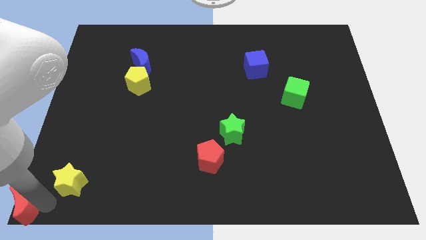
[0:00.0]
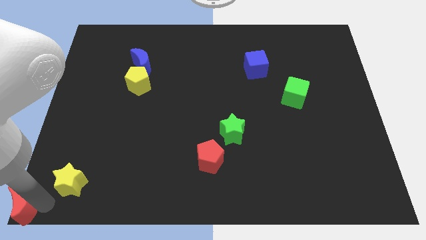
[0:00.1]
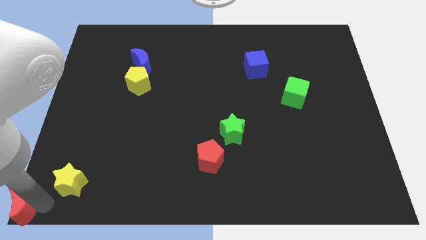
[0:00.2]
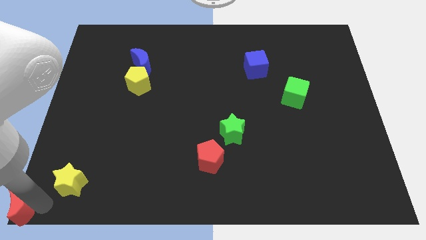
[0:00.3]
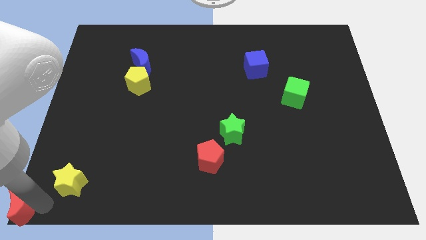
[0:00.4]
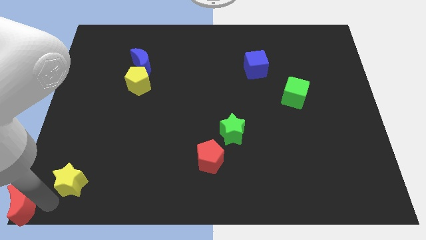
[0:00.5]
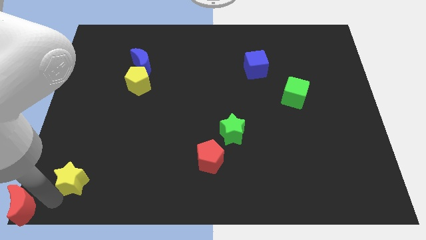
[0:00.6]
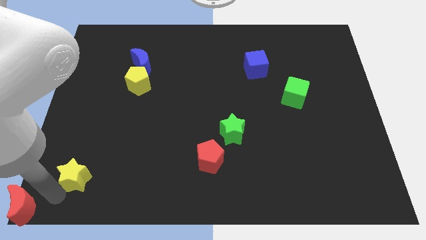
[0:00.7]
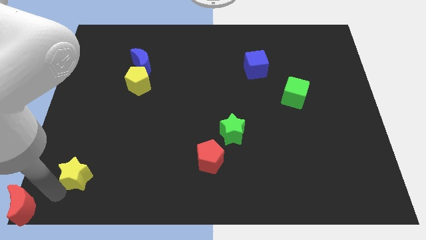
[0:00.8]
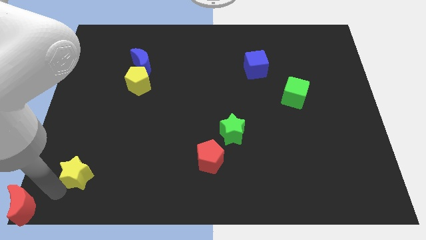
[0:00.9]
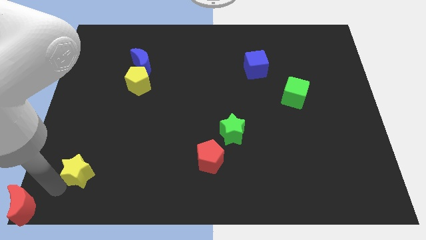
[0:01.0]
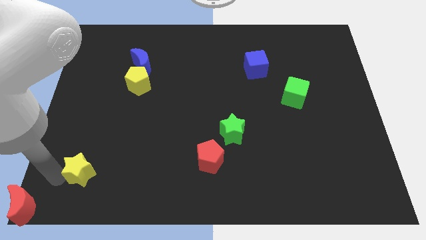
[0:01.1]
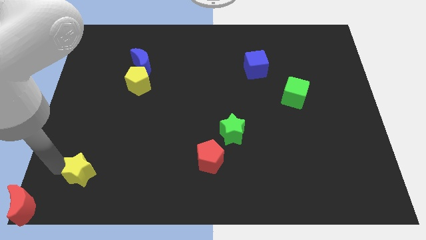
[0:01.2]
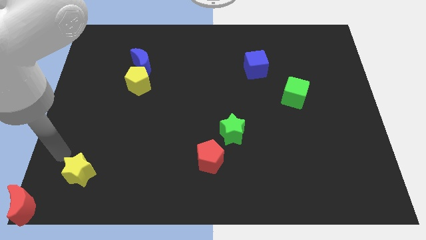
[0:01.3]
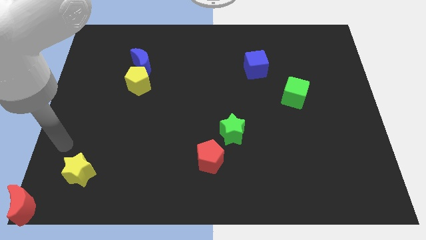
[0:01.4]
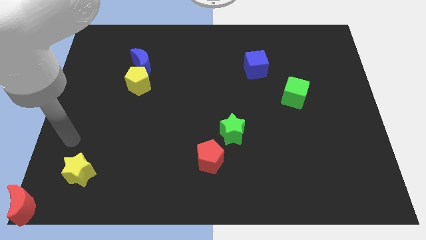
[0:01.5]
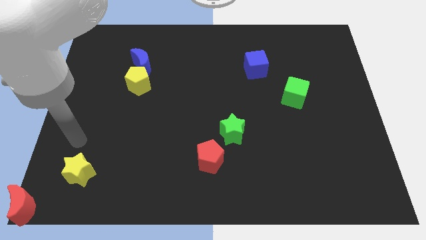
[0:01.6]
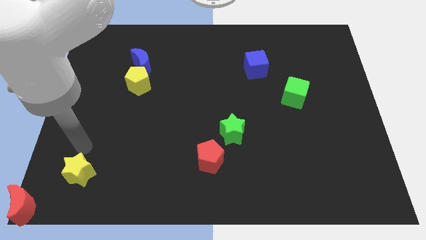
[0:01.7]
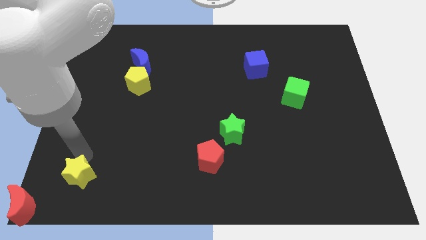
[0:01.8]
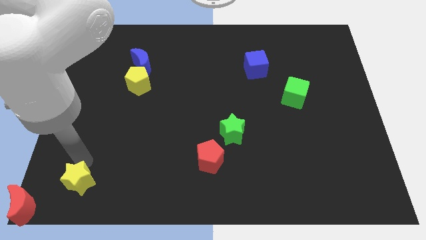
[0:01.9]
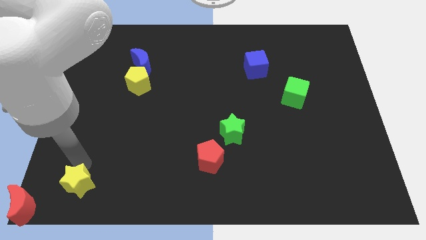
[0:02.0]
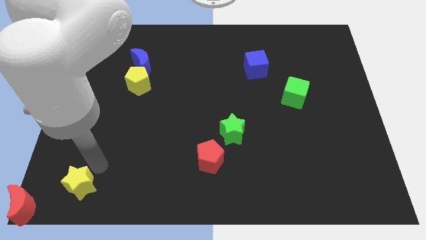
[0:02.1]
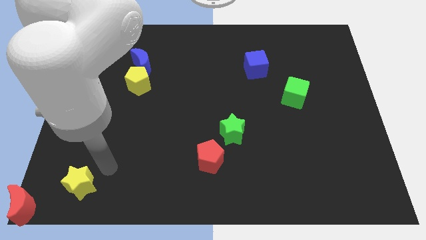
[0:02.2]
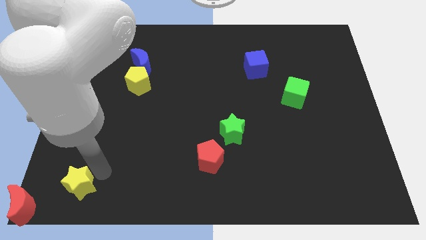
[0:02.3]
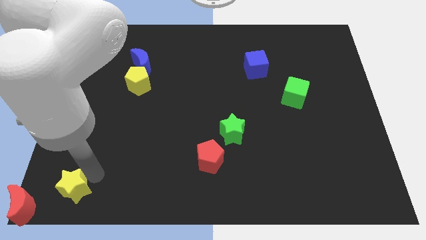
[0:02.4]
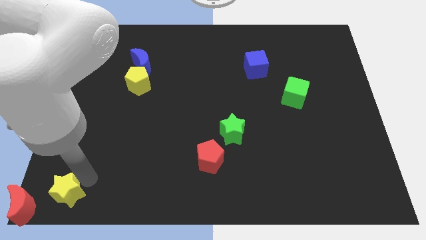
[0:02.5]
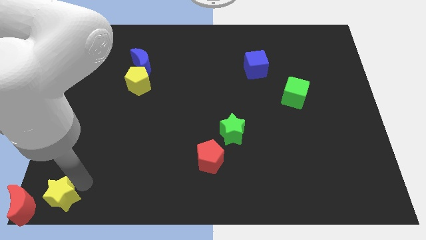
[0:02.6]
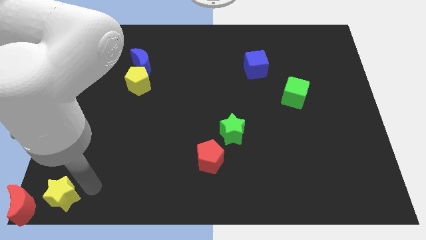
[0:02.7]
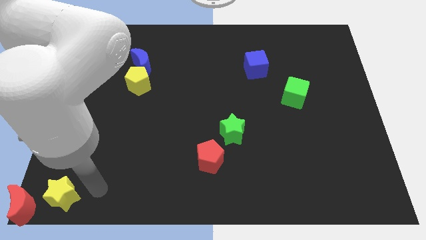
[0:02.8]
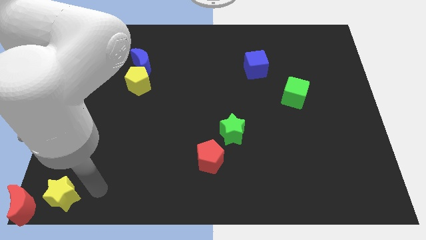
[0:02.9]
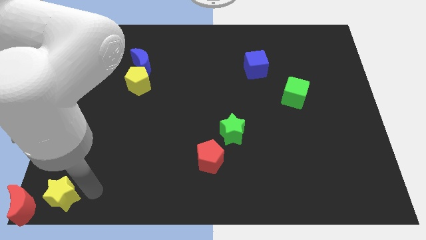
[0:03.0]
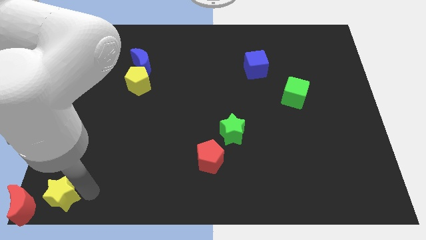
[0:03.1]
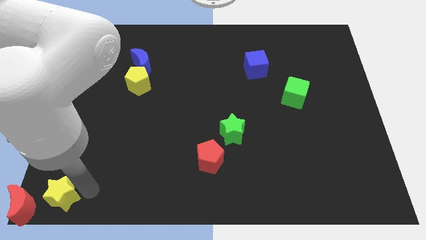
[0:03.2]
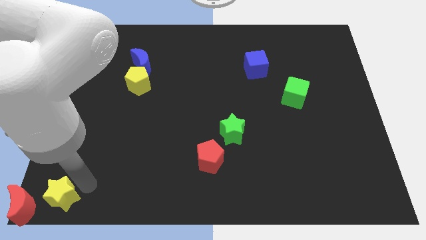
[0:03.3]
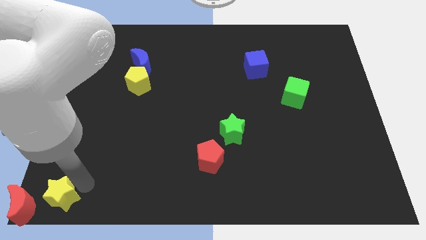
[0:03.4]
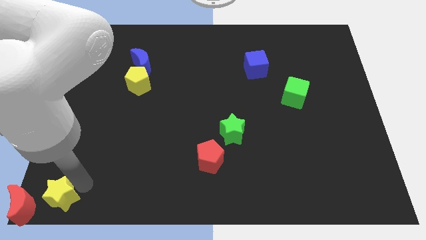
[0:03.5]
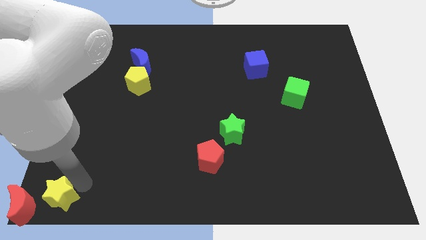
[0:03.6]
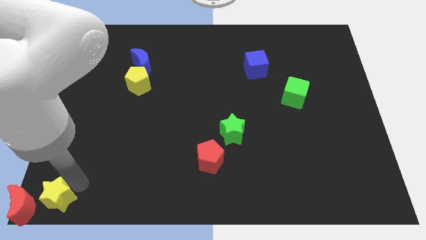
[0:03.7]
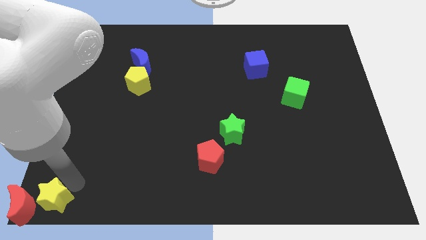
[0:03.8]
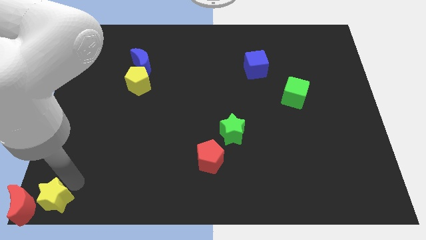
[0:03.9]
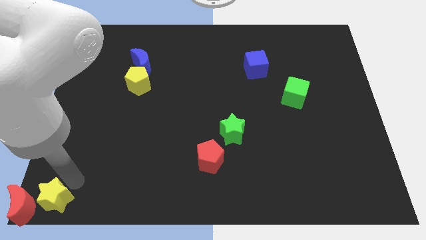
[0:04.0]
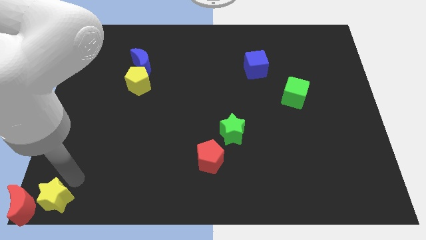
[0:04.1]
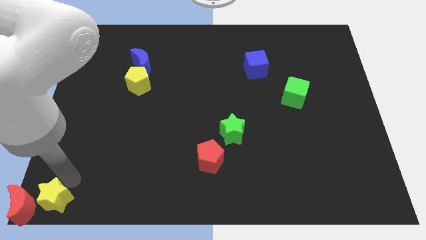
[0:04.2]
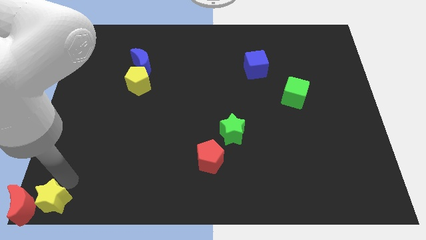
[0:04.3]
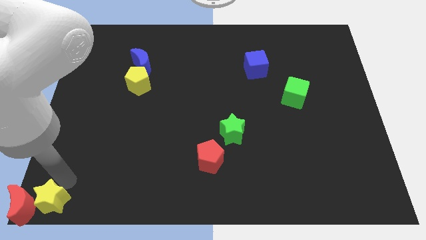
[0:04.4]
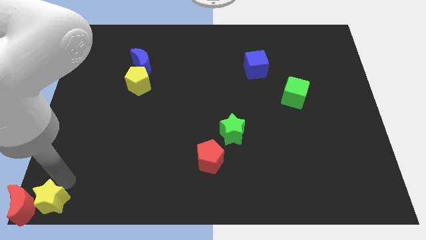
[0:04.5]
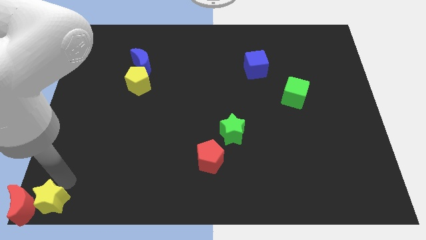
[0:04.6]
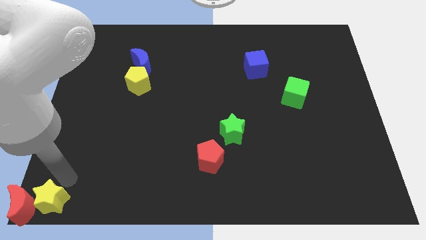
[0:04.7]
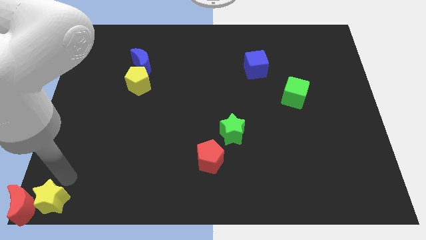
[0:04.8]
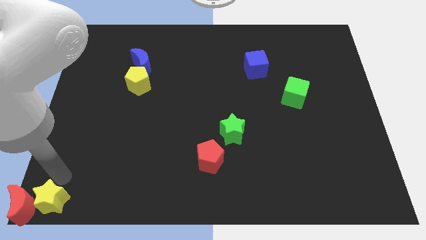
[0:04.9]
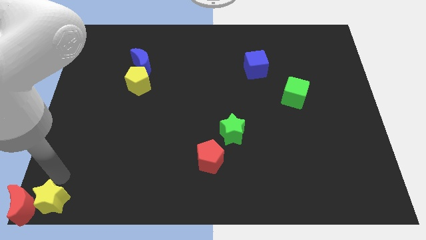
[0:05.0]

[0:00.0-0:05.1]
push yellow star to the right of red moon

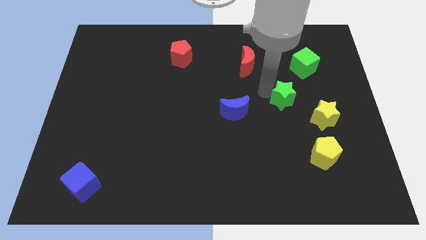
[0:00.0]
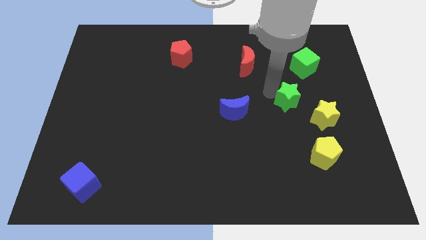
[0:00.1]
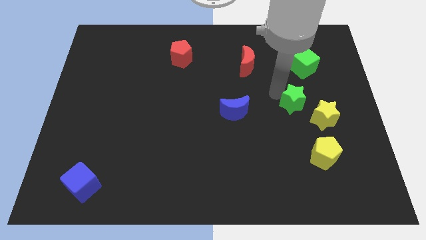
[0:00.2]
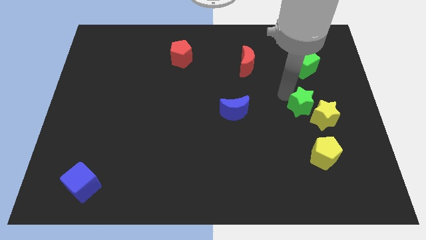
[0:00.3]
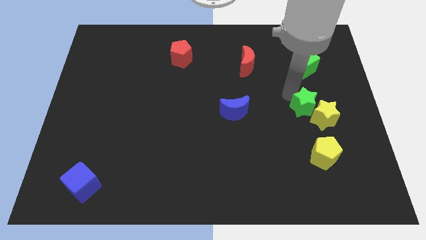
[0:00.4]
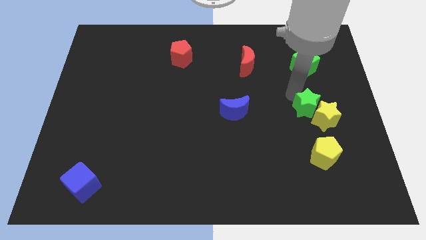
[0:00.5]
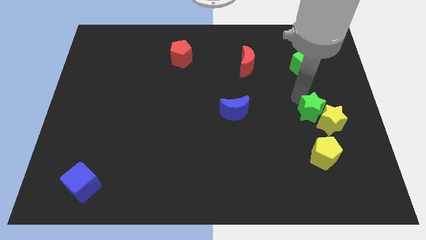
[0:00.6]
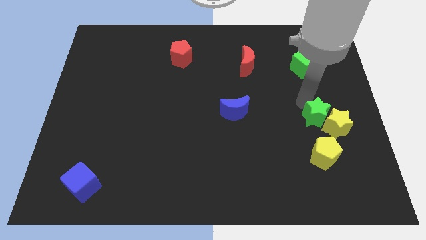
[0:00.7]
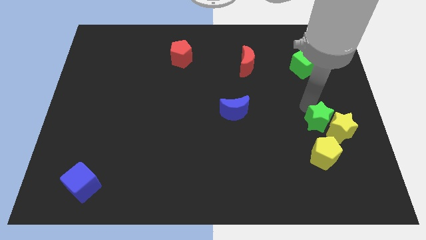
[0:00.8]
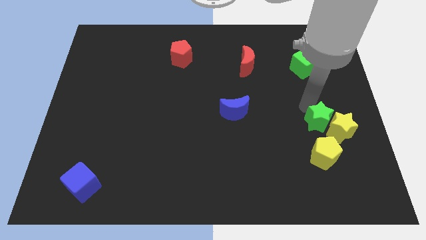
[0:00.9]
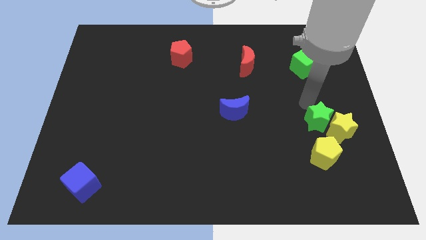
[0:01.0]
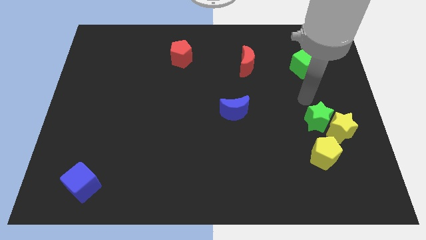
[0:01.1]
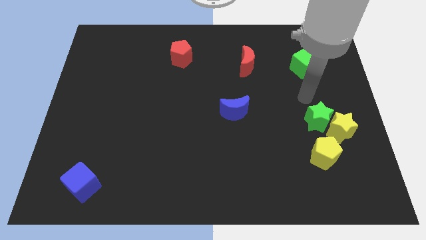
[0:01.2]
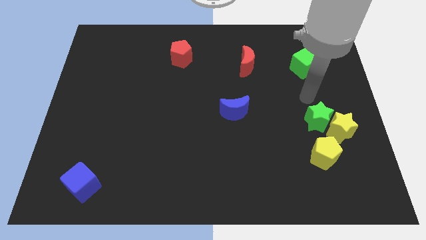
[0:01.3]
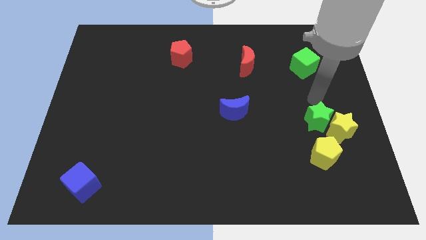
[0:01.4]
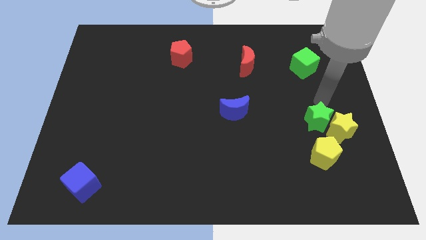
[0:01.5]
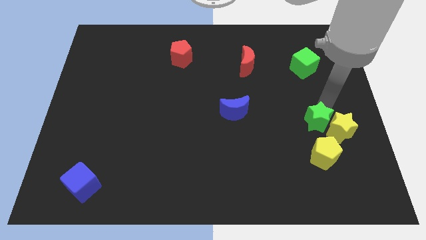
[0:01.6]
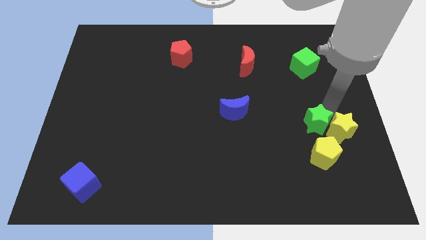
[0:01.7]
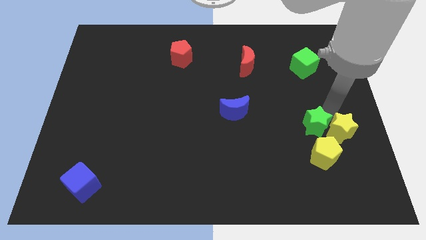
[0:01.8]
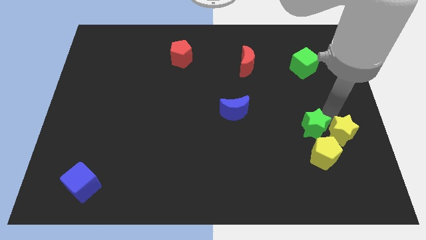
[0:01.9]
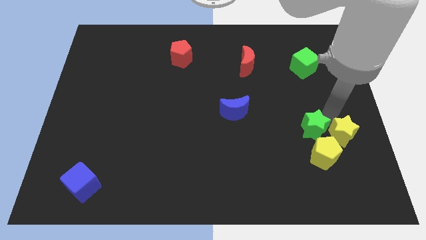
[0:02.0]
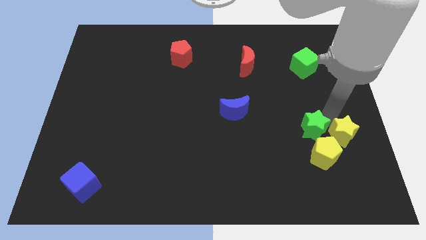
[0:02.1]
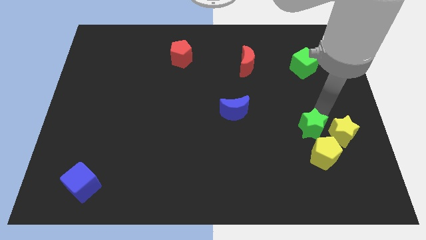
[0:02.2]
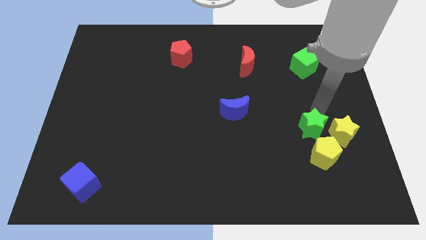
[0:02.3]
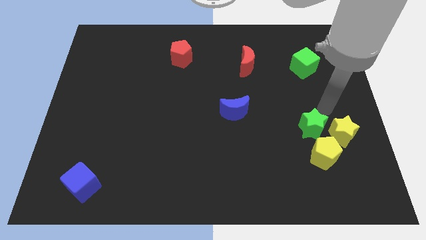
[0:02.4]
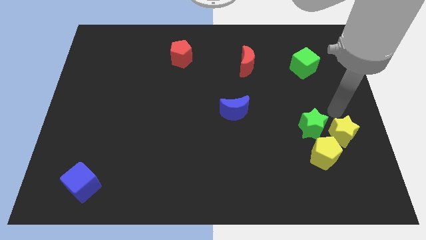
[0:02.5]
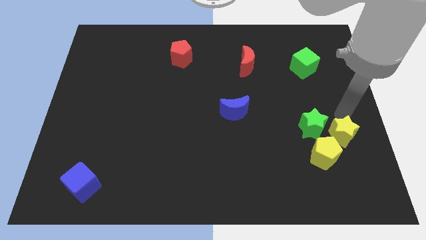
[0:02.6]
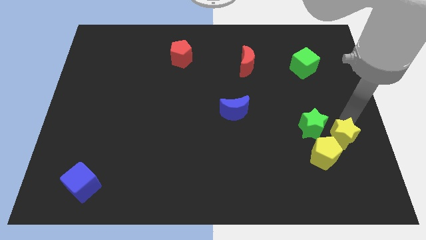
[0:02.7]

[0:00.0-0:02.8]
separate the green star and yellow star

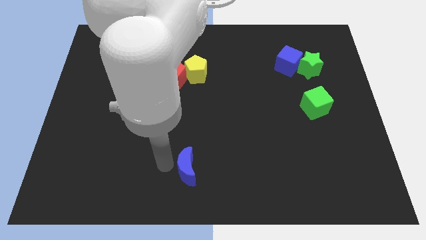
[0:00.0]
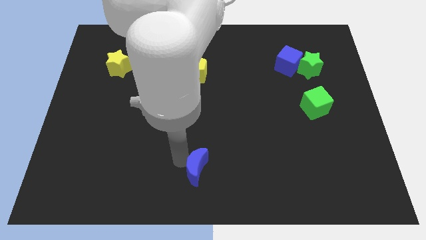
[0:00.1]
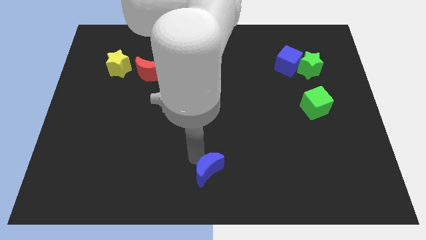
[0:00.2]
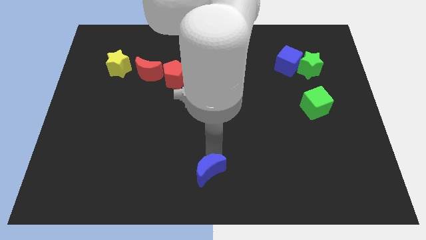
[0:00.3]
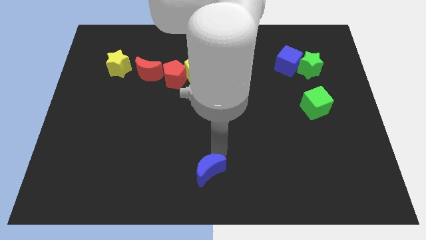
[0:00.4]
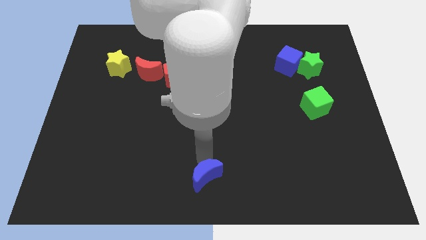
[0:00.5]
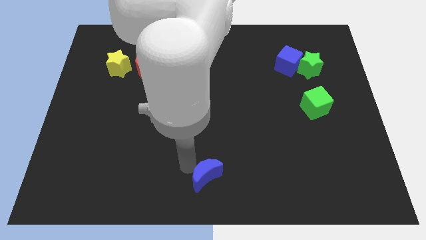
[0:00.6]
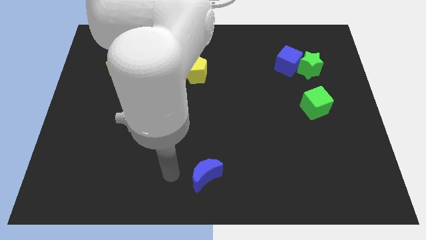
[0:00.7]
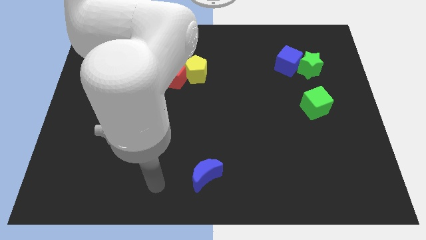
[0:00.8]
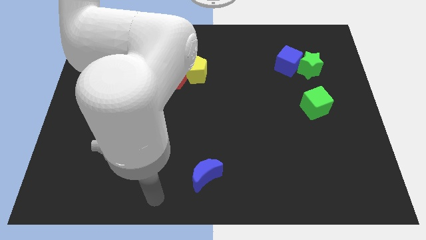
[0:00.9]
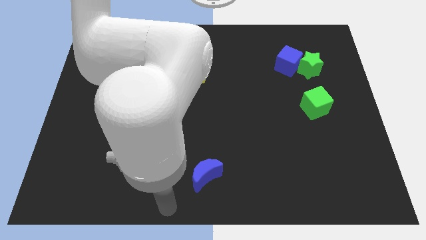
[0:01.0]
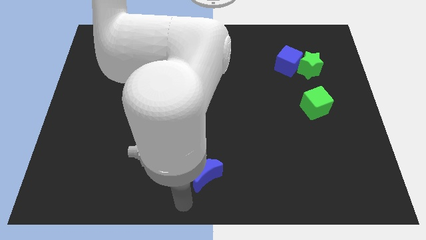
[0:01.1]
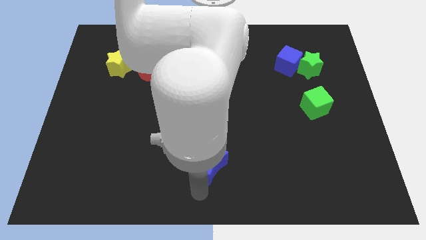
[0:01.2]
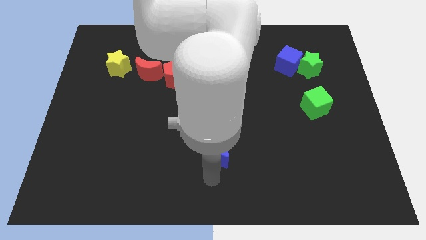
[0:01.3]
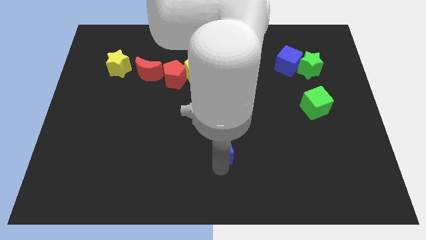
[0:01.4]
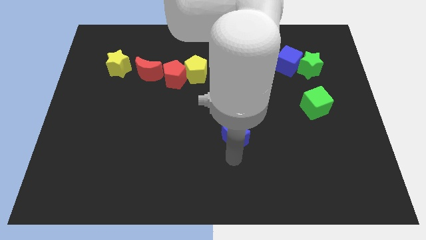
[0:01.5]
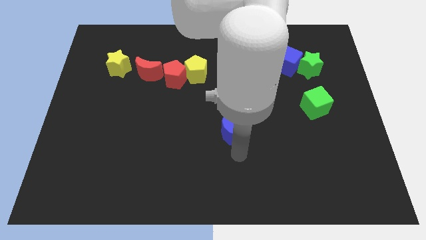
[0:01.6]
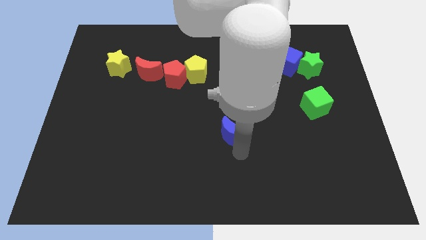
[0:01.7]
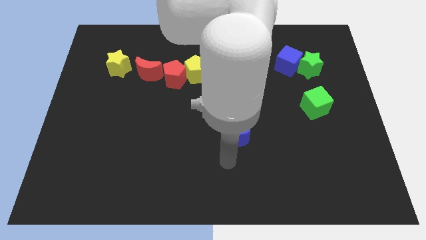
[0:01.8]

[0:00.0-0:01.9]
push the blue crescent slightly upwards
